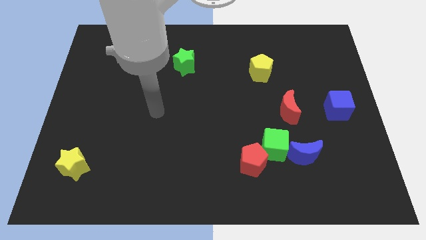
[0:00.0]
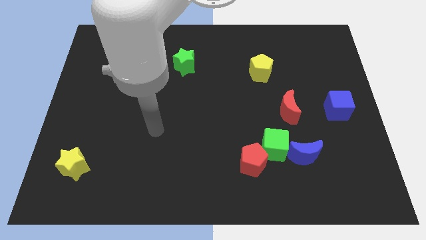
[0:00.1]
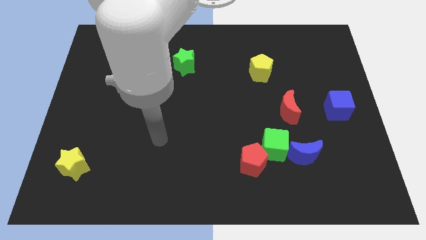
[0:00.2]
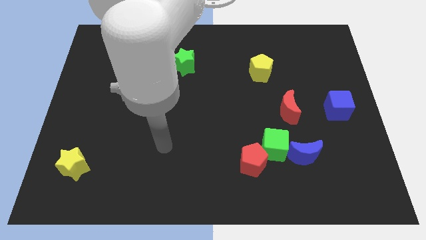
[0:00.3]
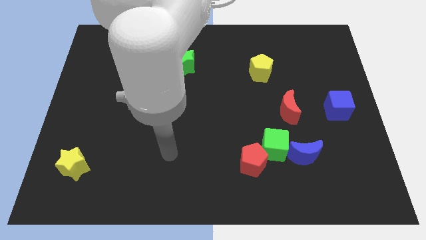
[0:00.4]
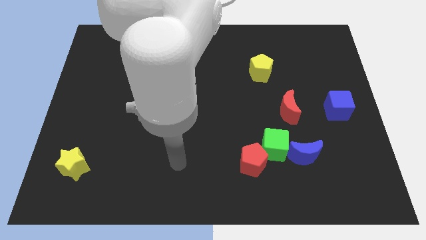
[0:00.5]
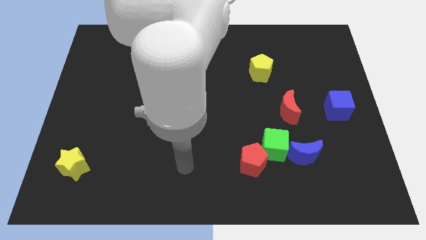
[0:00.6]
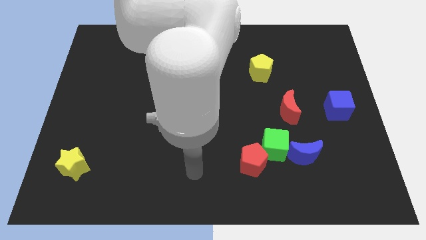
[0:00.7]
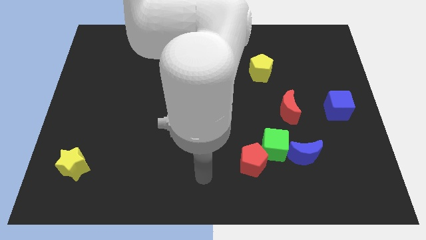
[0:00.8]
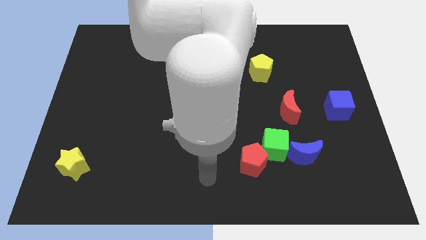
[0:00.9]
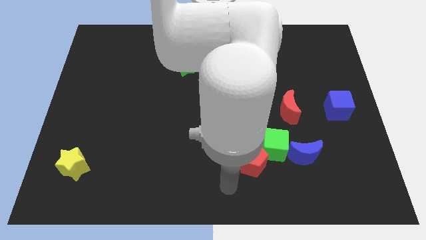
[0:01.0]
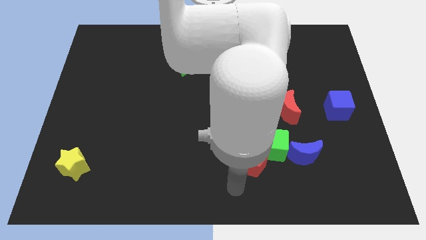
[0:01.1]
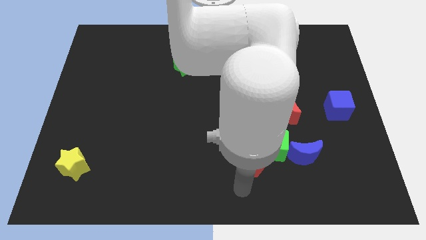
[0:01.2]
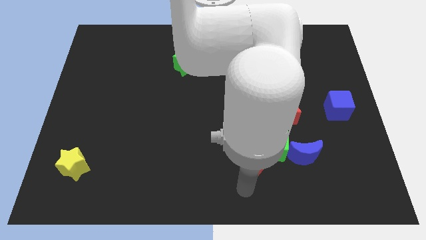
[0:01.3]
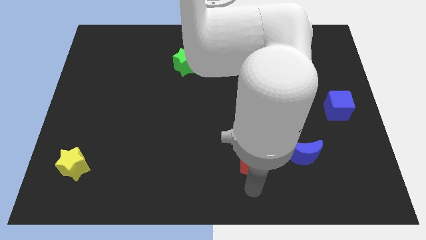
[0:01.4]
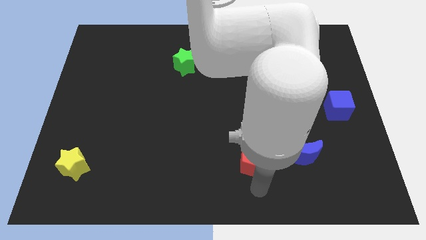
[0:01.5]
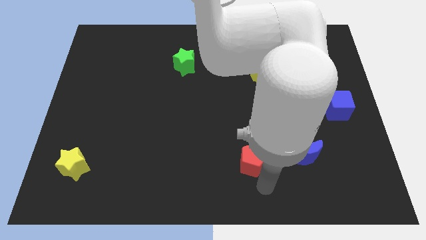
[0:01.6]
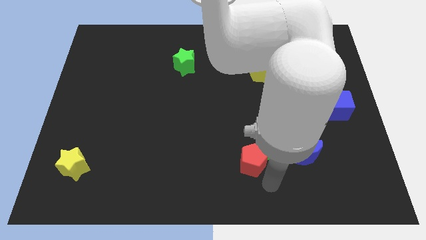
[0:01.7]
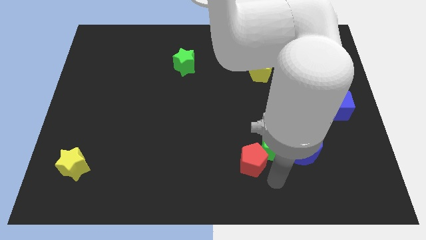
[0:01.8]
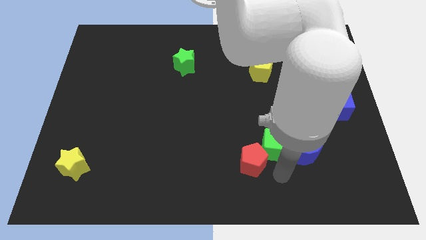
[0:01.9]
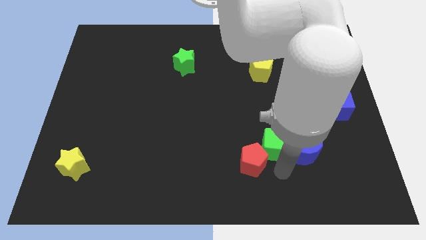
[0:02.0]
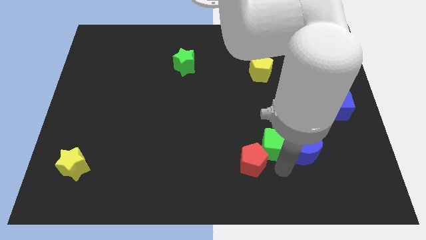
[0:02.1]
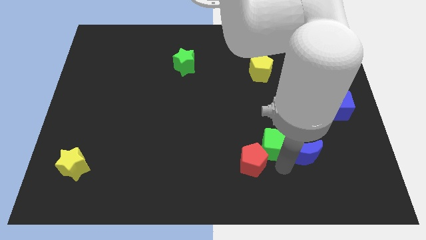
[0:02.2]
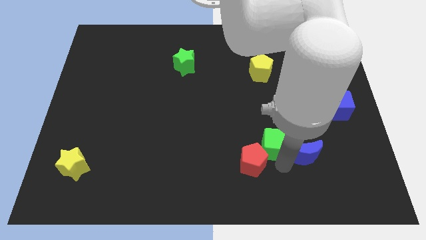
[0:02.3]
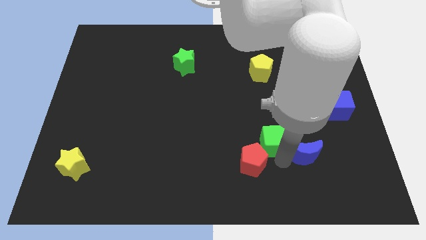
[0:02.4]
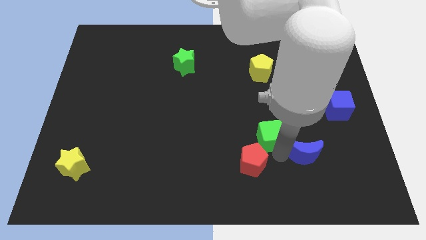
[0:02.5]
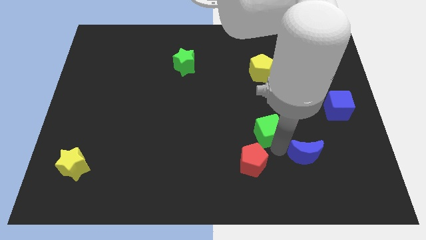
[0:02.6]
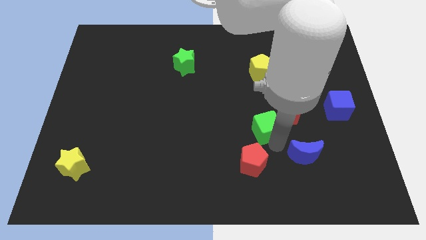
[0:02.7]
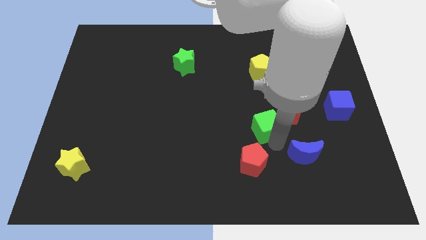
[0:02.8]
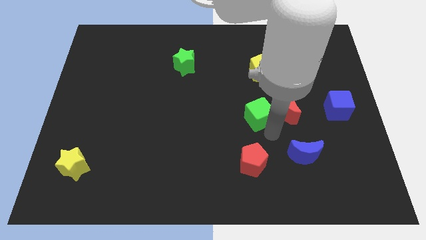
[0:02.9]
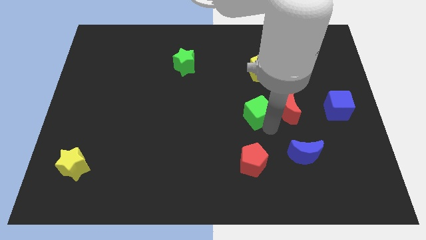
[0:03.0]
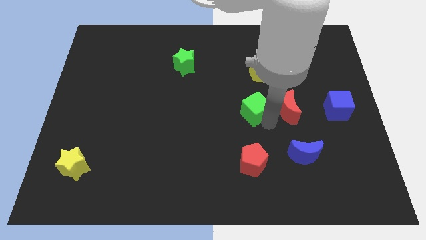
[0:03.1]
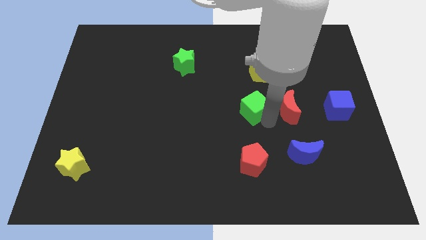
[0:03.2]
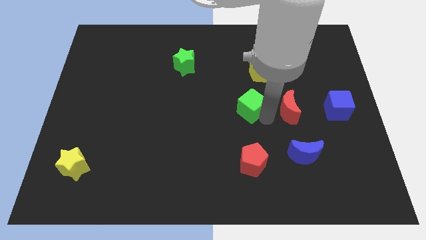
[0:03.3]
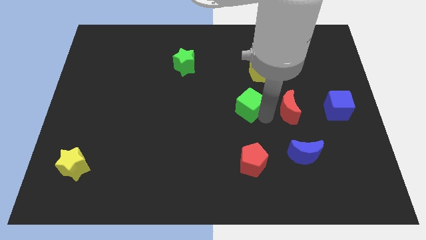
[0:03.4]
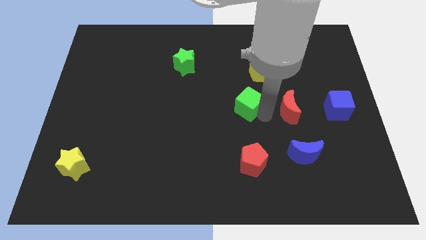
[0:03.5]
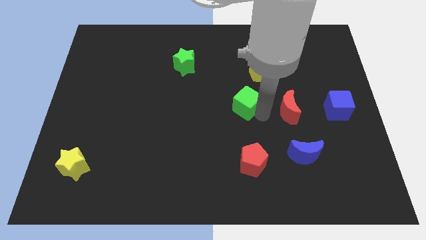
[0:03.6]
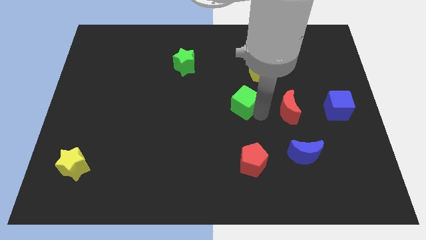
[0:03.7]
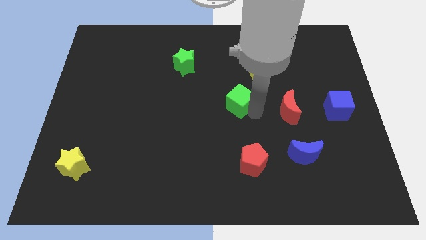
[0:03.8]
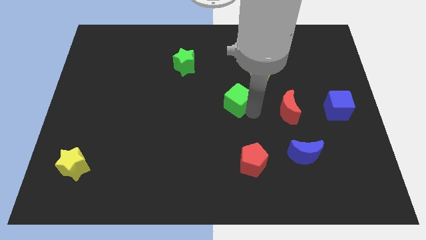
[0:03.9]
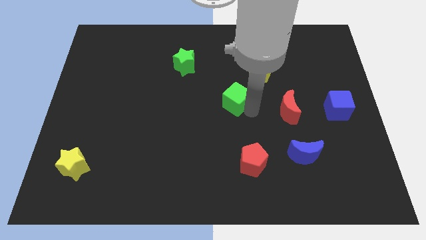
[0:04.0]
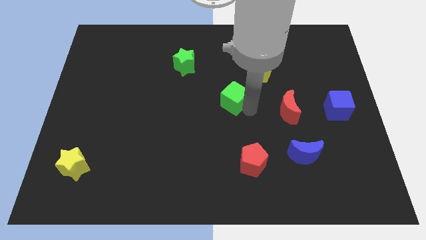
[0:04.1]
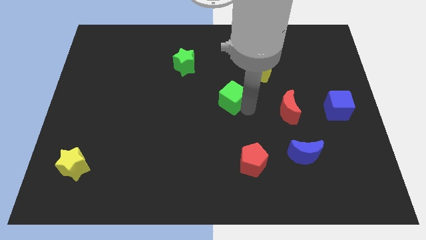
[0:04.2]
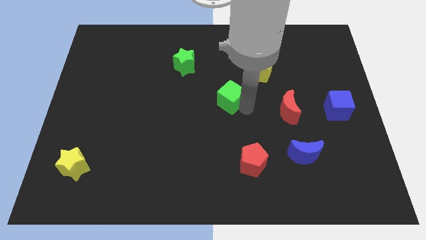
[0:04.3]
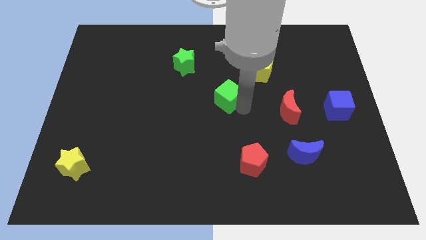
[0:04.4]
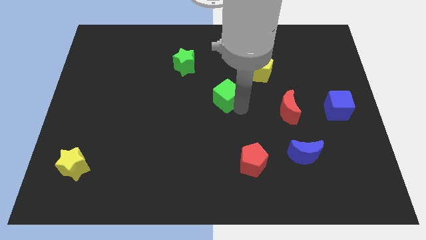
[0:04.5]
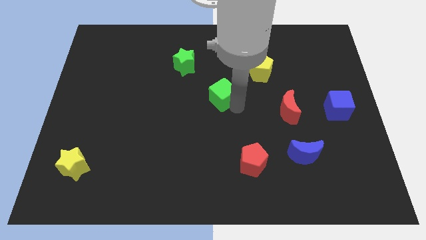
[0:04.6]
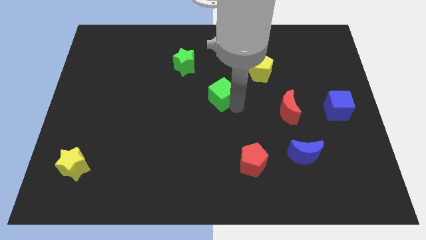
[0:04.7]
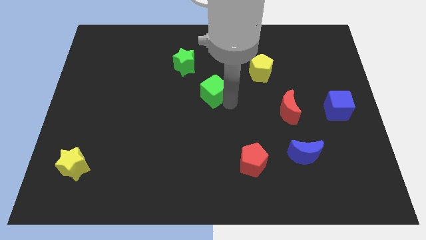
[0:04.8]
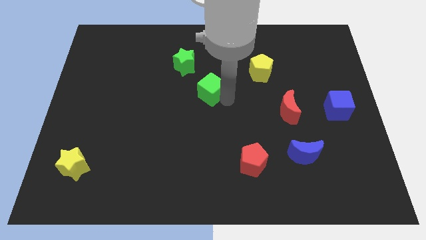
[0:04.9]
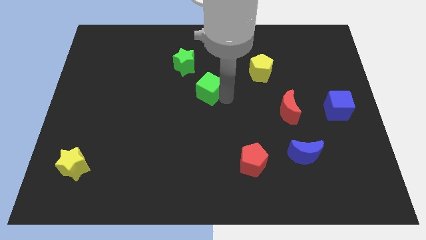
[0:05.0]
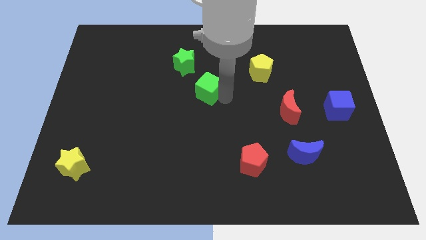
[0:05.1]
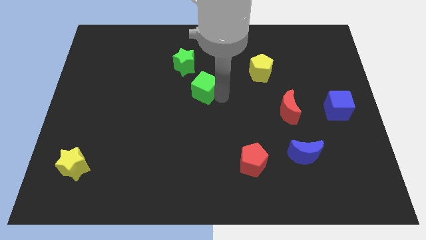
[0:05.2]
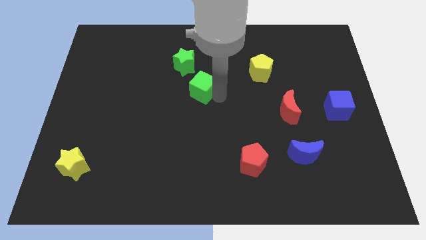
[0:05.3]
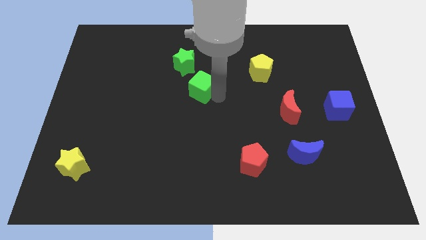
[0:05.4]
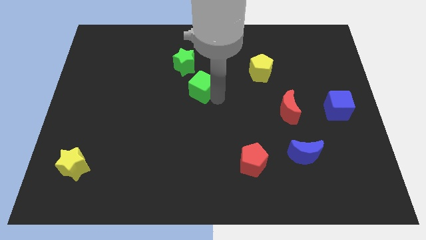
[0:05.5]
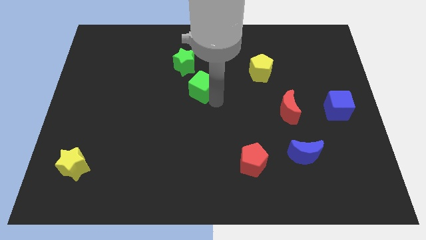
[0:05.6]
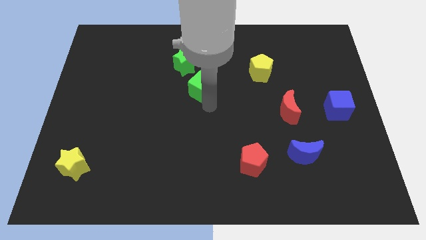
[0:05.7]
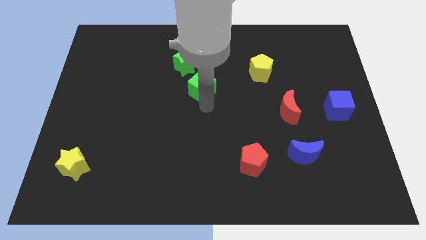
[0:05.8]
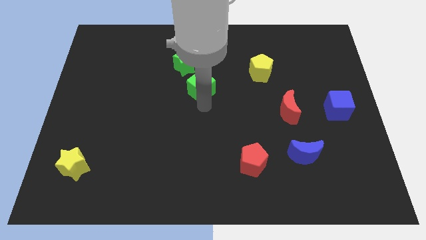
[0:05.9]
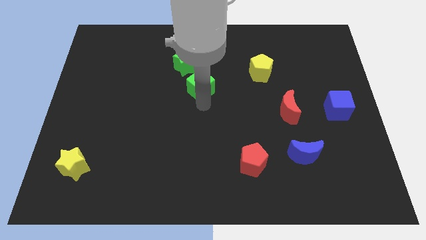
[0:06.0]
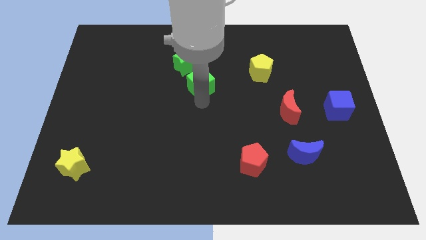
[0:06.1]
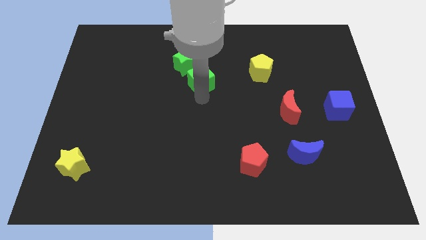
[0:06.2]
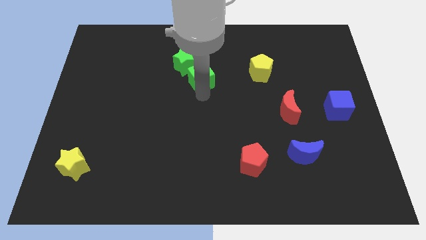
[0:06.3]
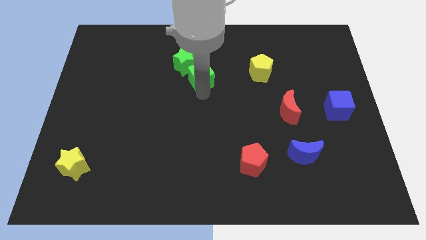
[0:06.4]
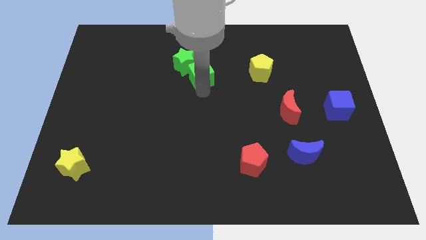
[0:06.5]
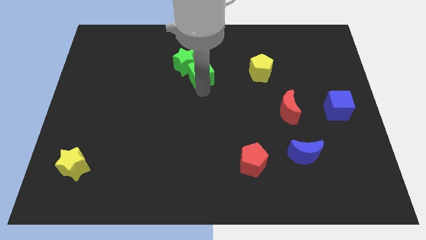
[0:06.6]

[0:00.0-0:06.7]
push the green cube towards the green star

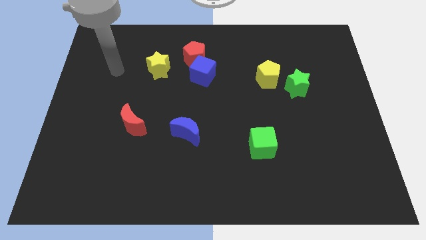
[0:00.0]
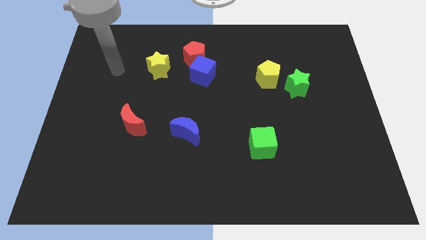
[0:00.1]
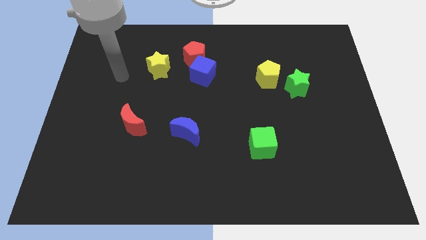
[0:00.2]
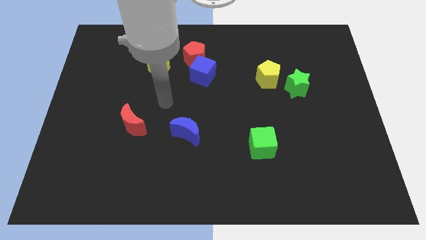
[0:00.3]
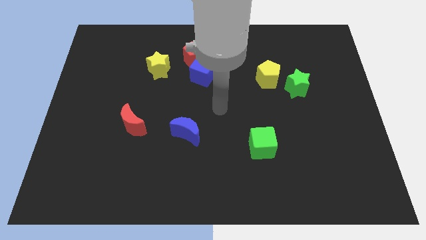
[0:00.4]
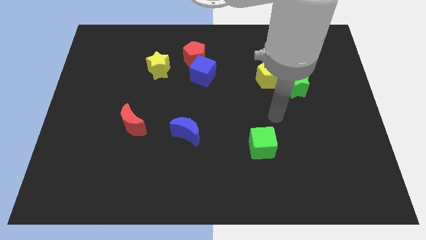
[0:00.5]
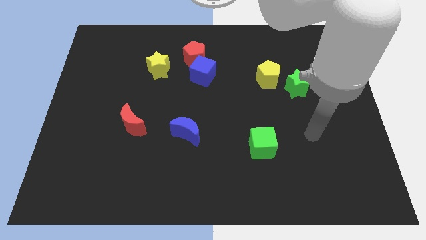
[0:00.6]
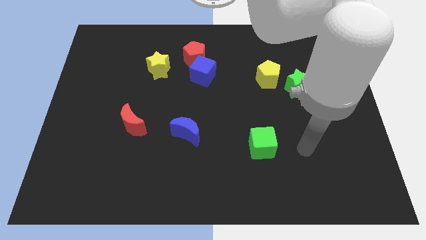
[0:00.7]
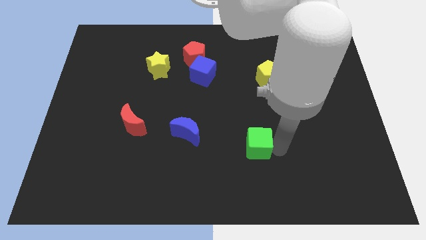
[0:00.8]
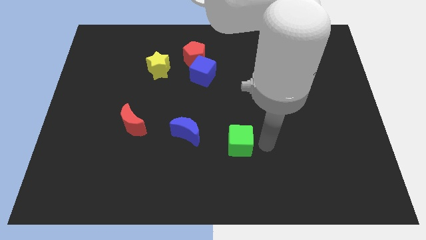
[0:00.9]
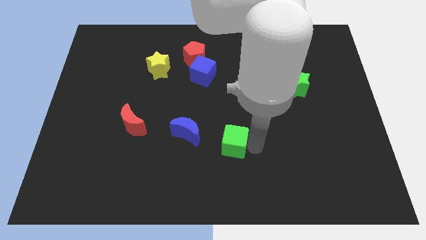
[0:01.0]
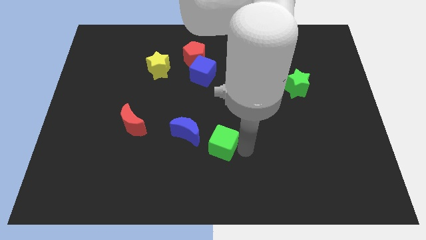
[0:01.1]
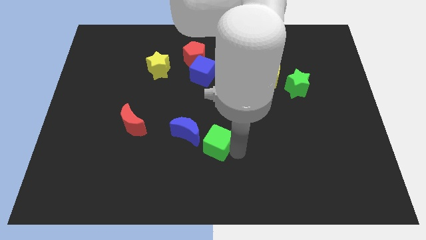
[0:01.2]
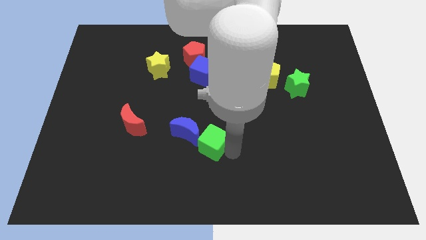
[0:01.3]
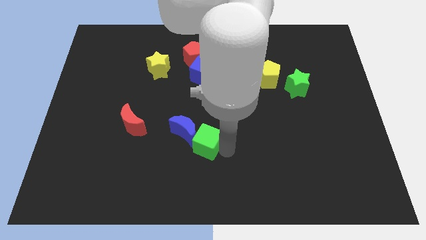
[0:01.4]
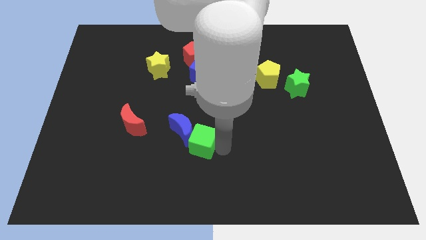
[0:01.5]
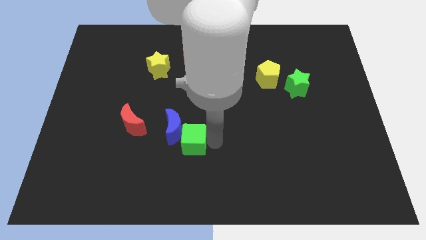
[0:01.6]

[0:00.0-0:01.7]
slide the green cube close to the blue moon
